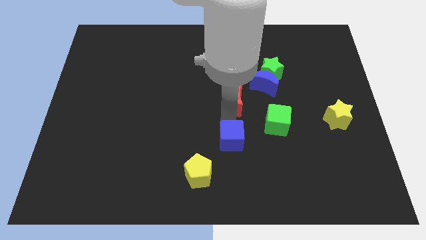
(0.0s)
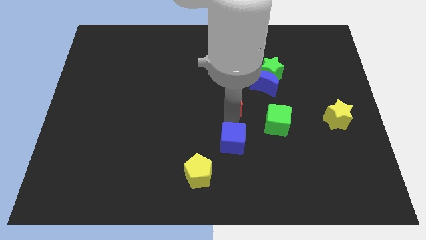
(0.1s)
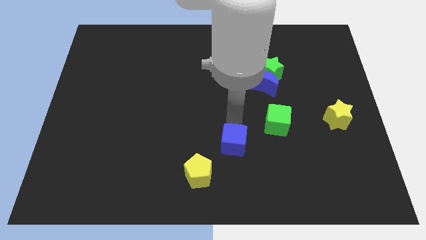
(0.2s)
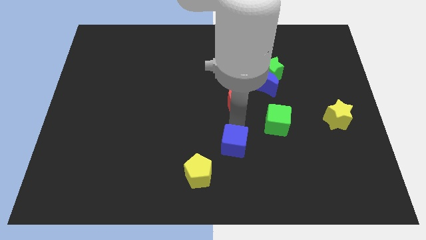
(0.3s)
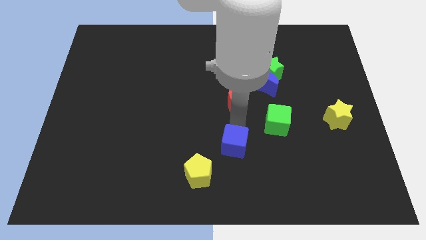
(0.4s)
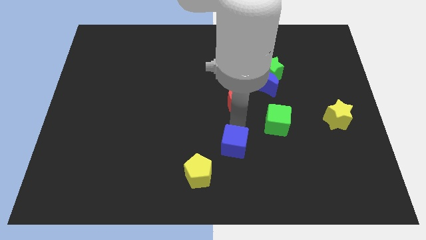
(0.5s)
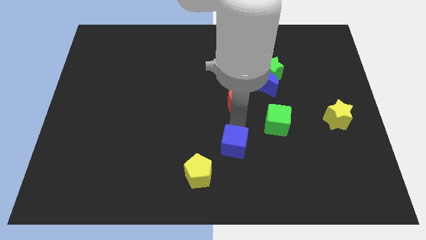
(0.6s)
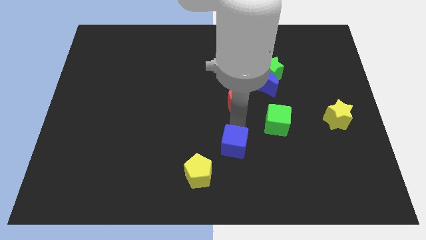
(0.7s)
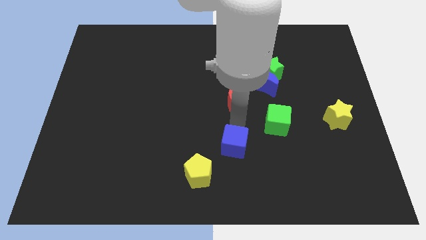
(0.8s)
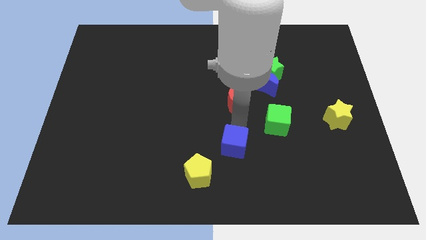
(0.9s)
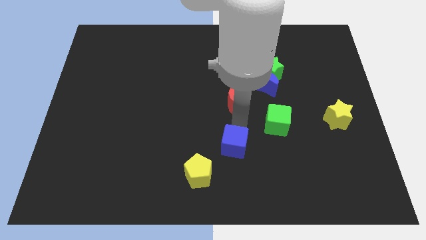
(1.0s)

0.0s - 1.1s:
move the blue cube slightly downwards

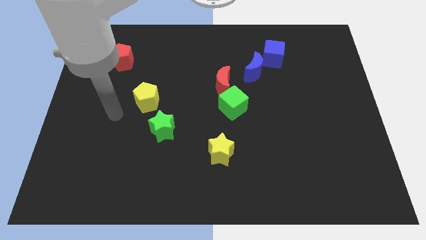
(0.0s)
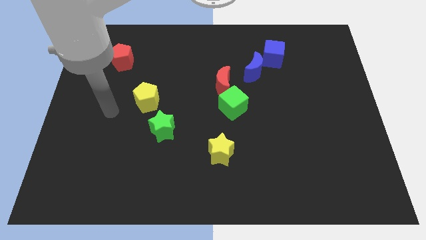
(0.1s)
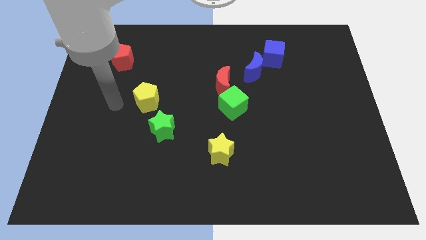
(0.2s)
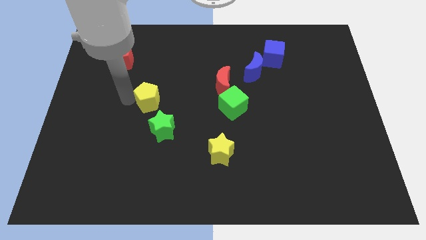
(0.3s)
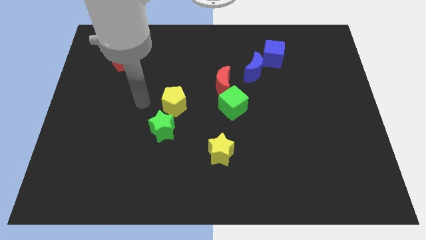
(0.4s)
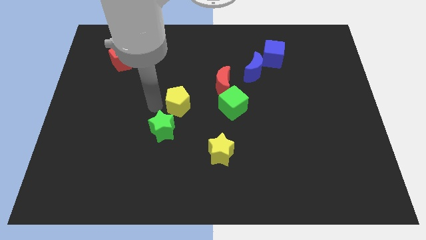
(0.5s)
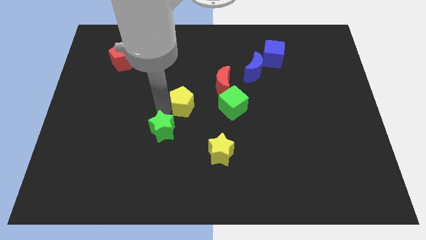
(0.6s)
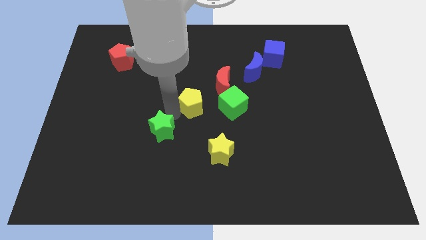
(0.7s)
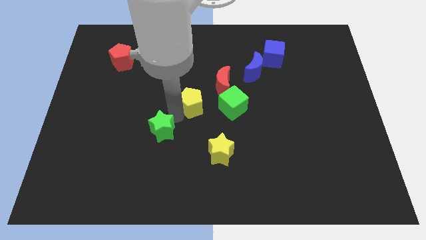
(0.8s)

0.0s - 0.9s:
put the yellow pentagon in between the red moon and green star

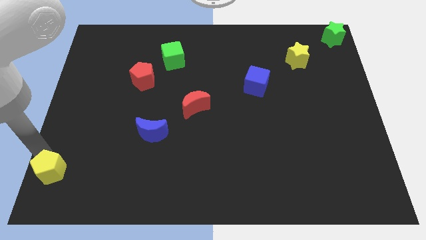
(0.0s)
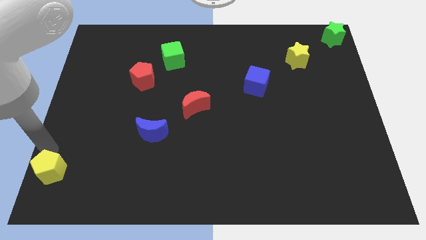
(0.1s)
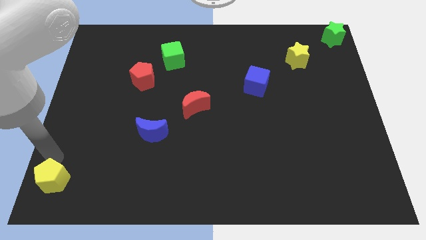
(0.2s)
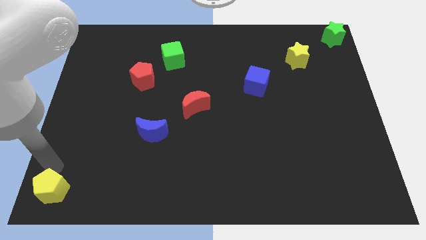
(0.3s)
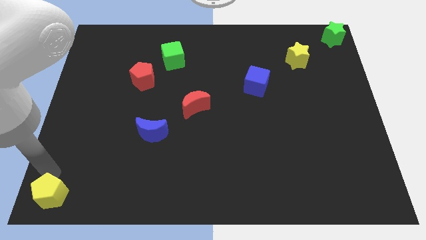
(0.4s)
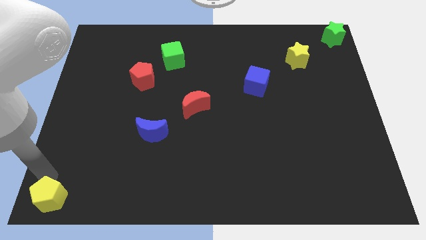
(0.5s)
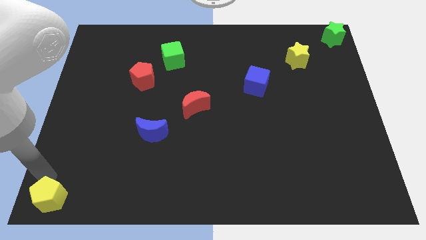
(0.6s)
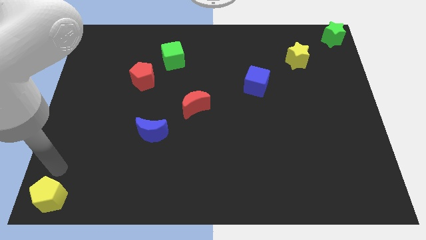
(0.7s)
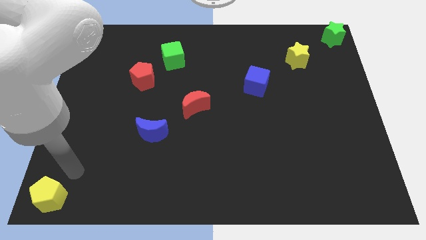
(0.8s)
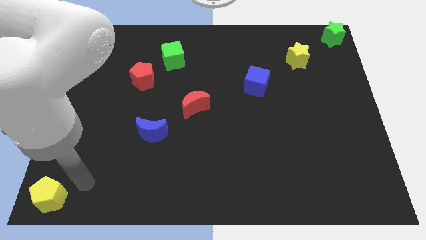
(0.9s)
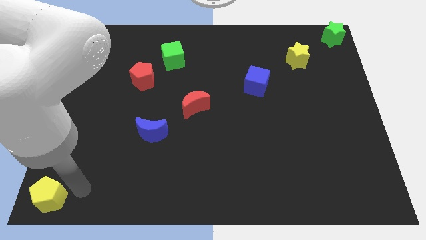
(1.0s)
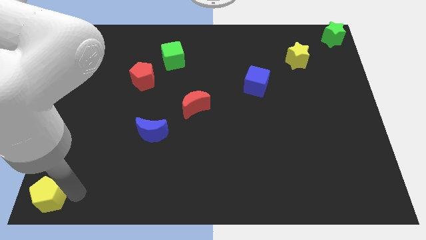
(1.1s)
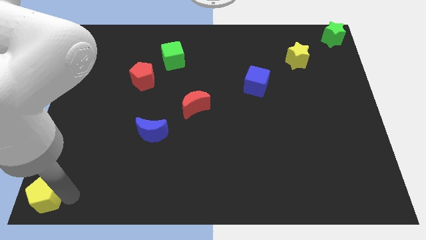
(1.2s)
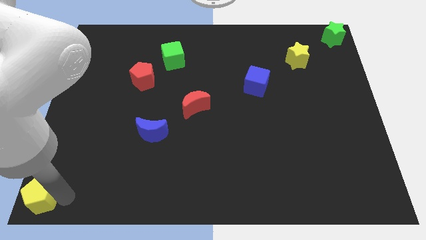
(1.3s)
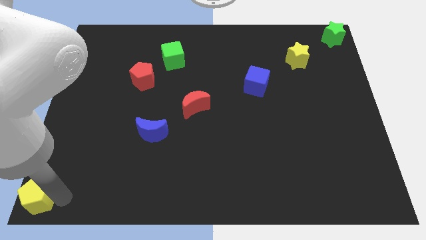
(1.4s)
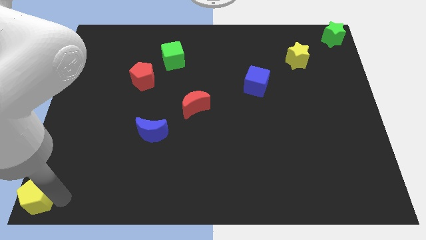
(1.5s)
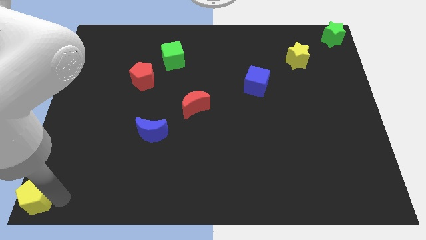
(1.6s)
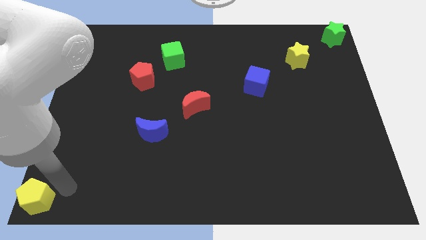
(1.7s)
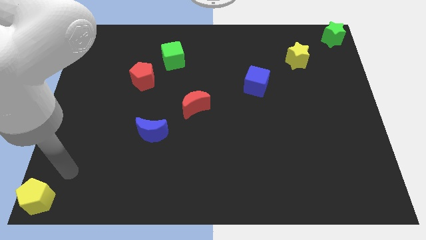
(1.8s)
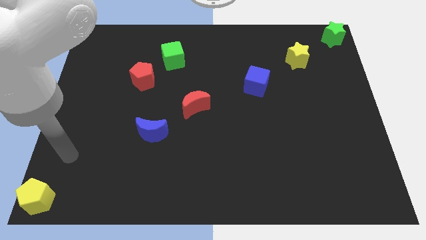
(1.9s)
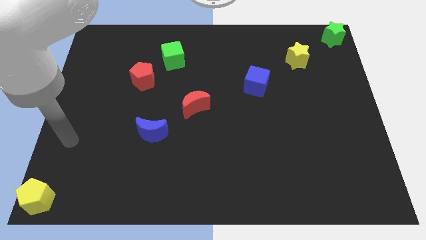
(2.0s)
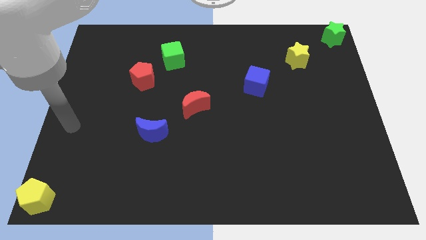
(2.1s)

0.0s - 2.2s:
move the yellow pentagon to the bottom left corner of the board

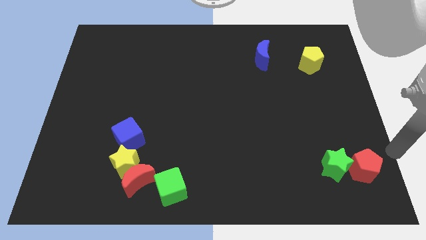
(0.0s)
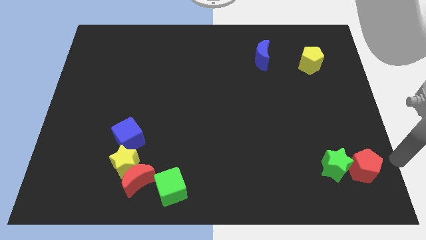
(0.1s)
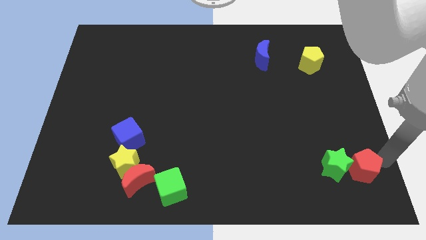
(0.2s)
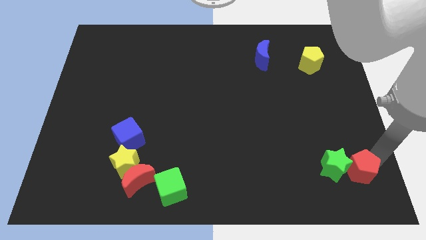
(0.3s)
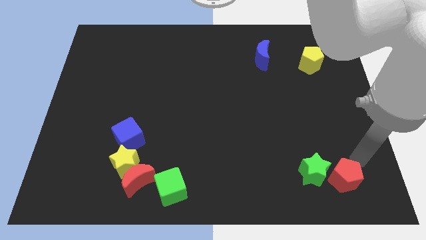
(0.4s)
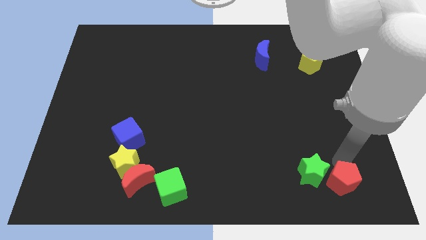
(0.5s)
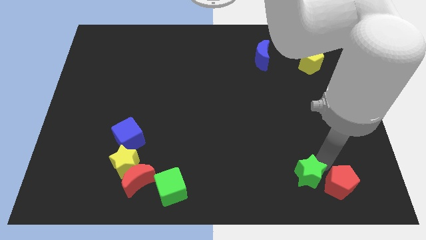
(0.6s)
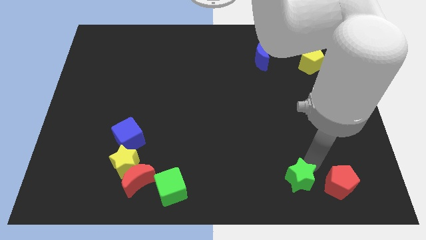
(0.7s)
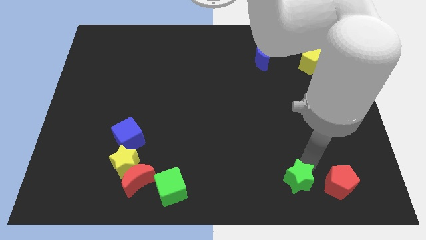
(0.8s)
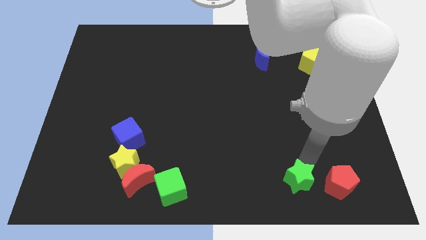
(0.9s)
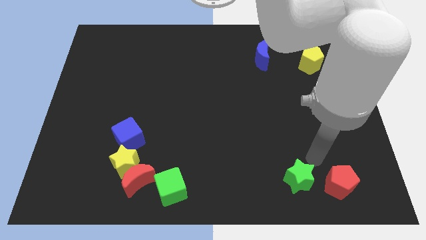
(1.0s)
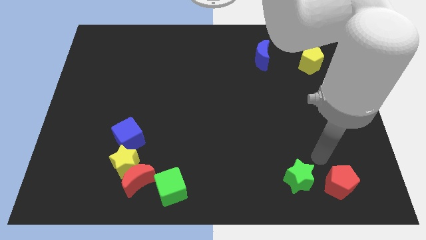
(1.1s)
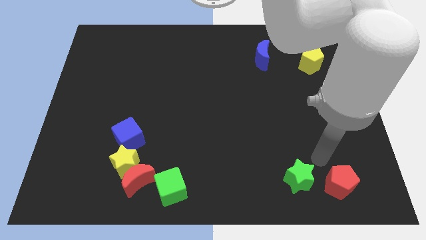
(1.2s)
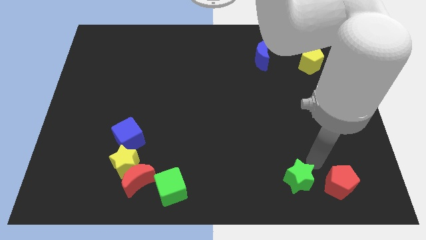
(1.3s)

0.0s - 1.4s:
push the red pentagon along with green star

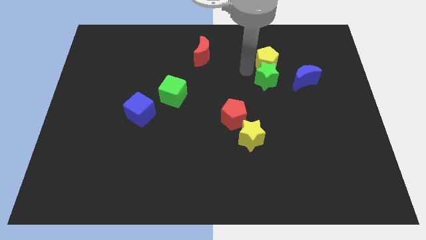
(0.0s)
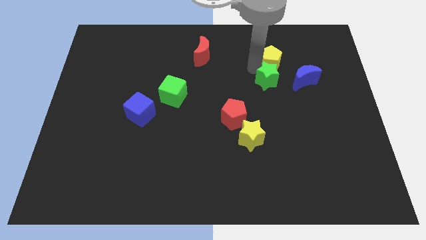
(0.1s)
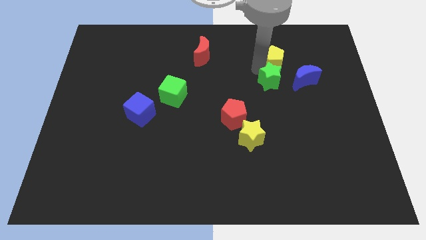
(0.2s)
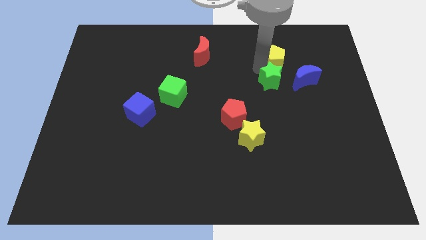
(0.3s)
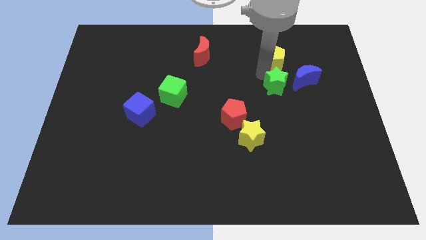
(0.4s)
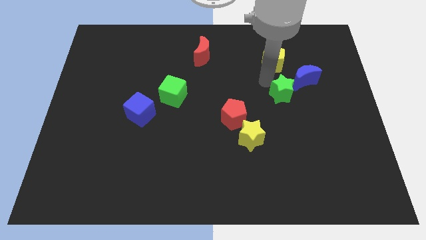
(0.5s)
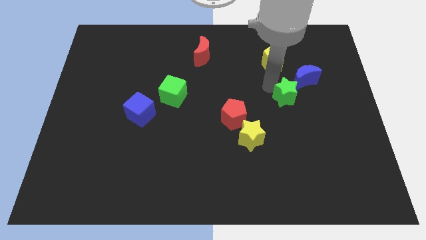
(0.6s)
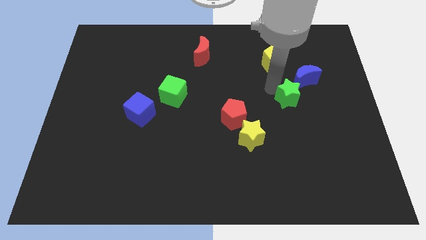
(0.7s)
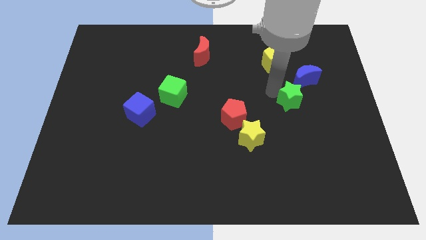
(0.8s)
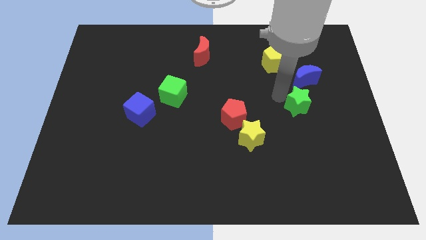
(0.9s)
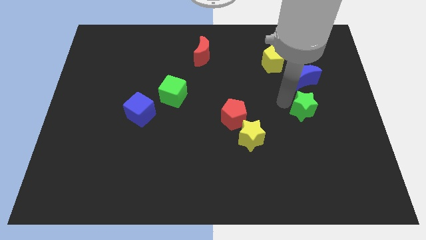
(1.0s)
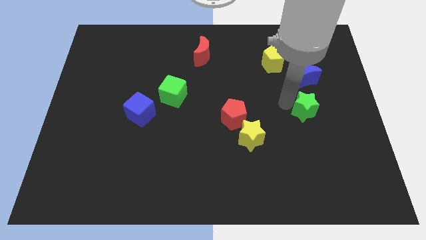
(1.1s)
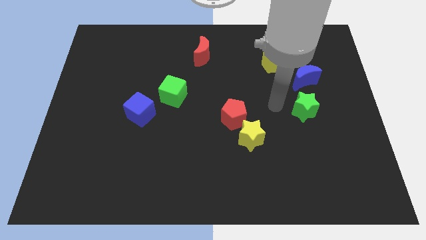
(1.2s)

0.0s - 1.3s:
put the green star below the blue moon

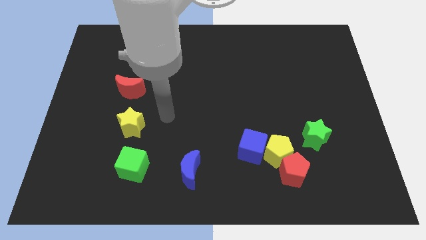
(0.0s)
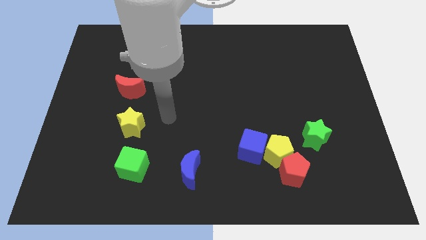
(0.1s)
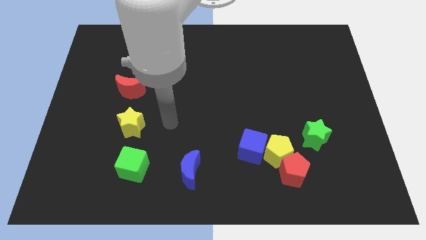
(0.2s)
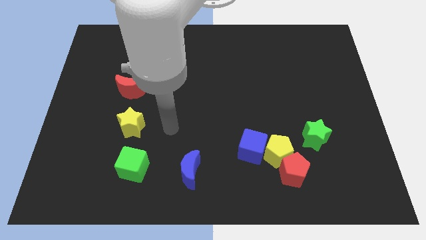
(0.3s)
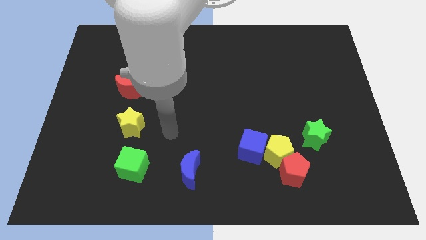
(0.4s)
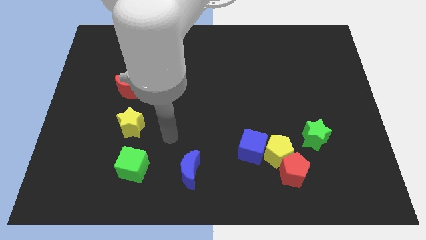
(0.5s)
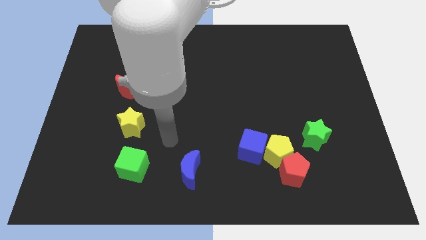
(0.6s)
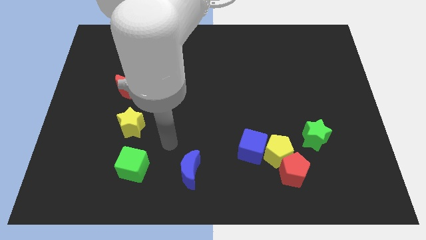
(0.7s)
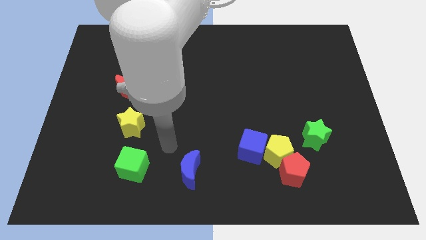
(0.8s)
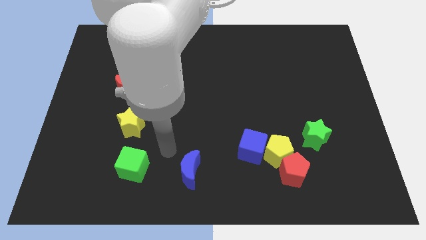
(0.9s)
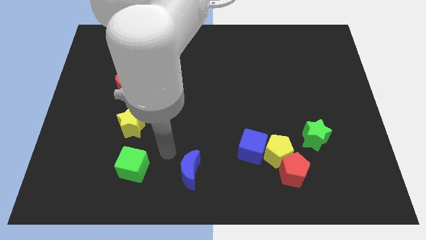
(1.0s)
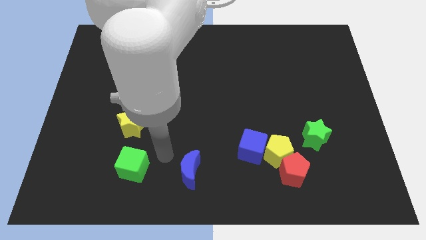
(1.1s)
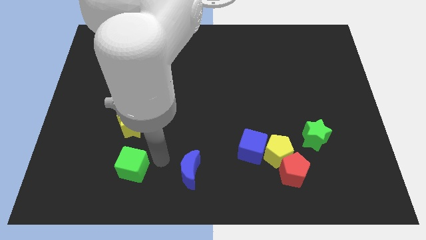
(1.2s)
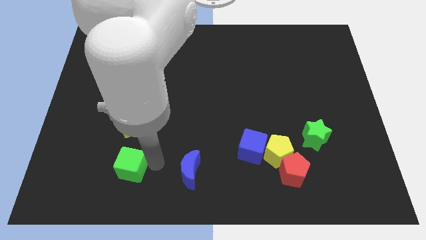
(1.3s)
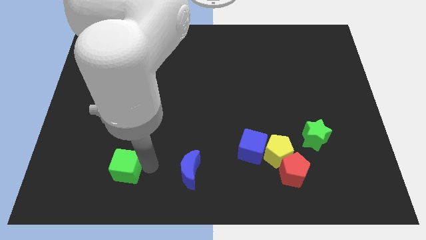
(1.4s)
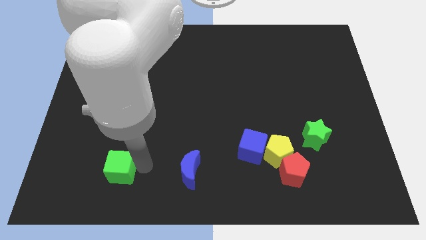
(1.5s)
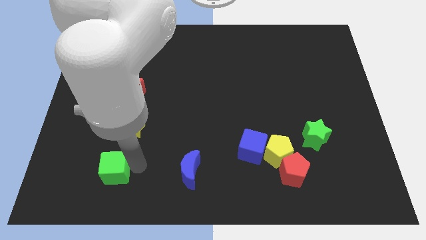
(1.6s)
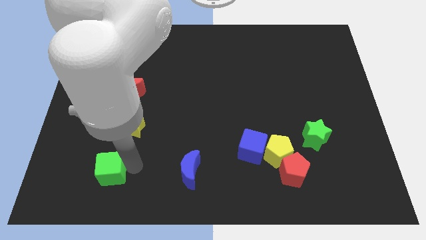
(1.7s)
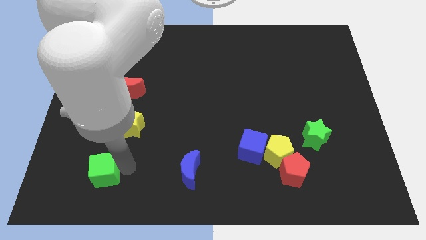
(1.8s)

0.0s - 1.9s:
slightly push the green cube
